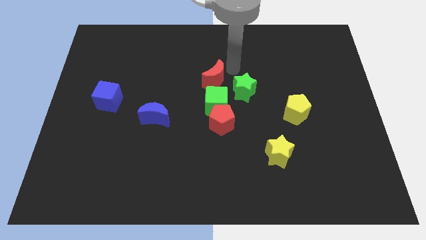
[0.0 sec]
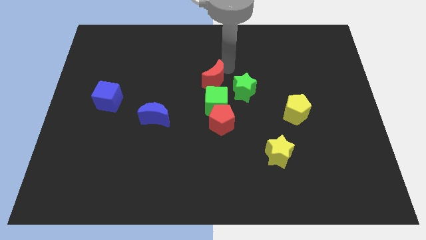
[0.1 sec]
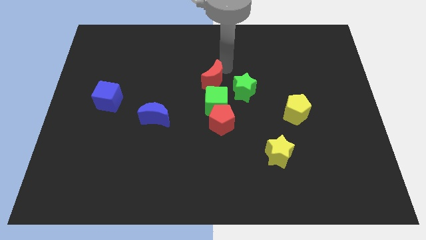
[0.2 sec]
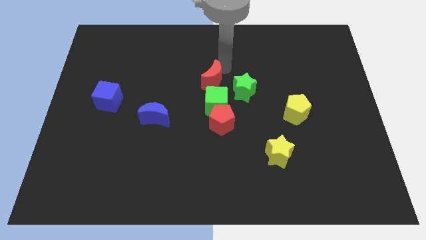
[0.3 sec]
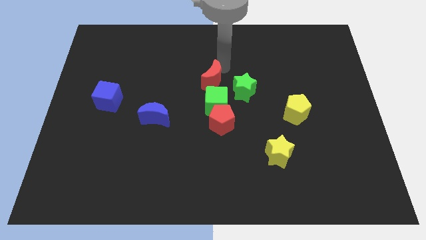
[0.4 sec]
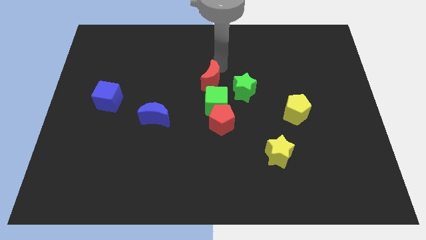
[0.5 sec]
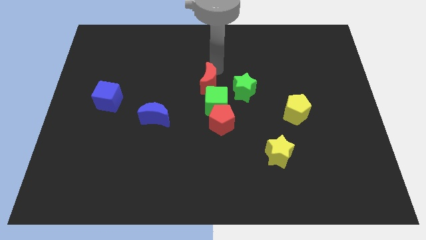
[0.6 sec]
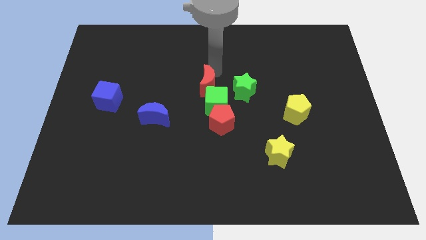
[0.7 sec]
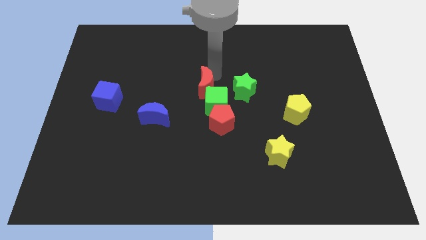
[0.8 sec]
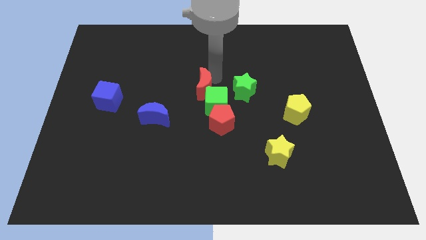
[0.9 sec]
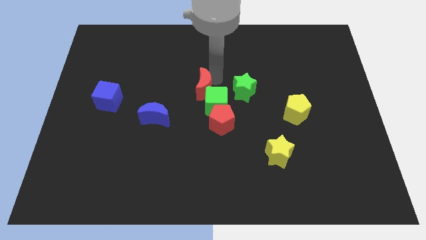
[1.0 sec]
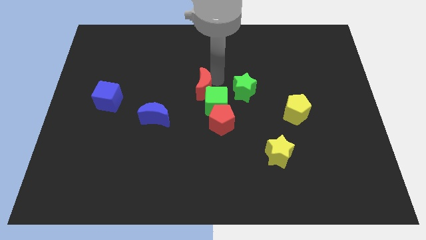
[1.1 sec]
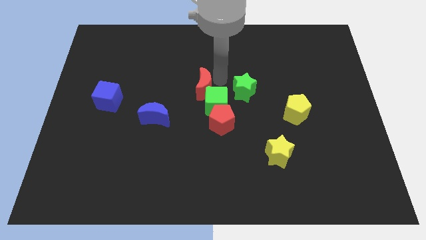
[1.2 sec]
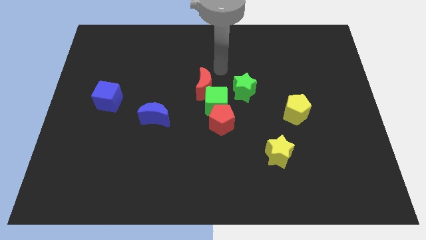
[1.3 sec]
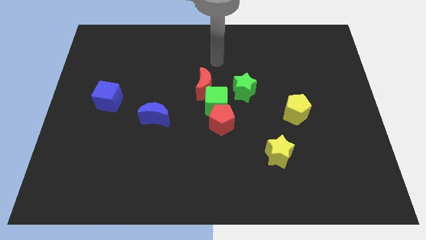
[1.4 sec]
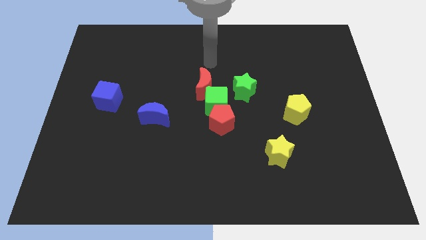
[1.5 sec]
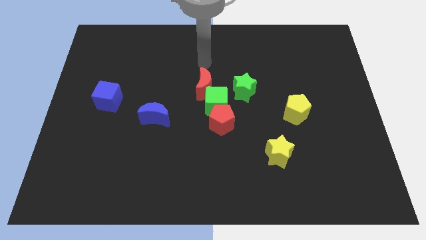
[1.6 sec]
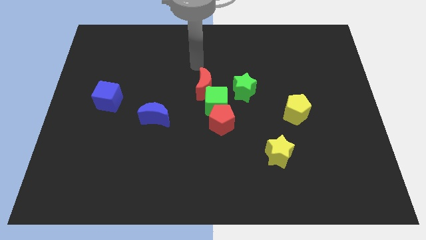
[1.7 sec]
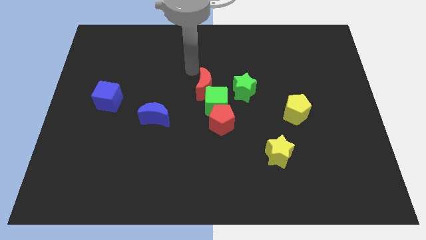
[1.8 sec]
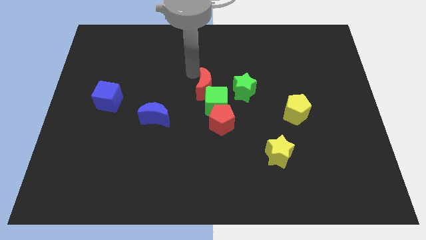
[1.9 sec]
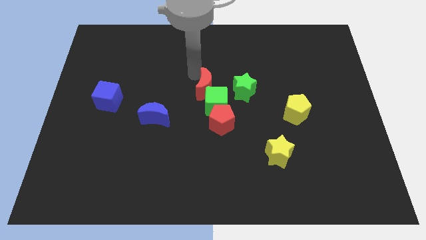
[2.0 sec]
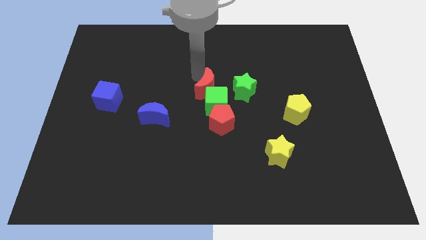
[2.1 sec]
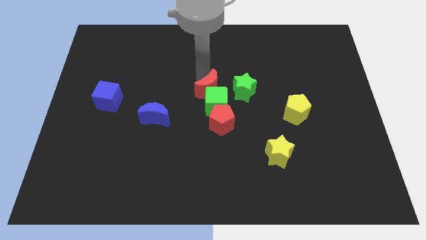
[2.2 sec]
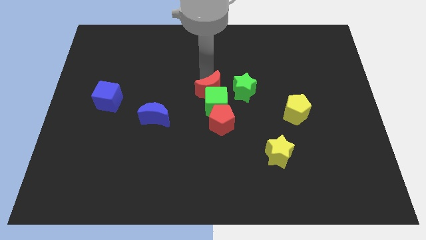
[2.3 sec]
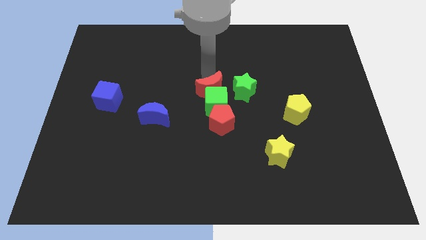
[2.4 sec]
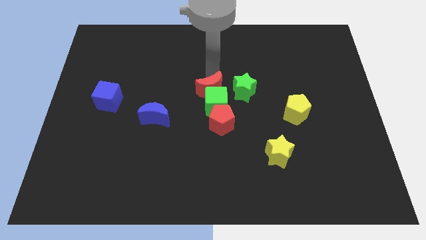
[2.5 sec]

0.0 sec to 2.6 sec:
place the red crescent into top of the green cube

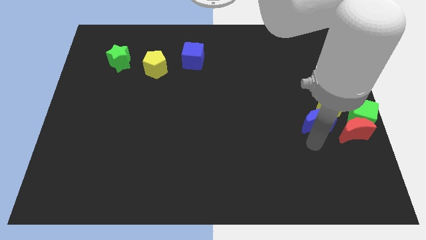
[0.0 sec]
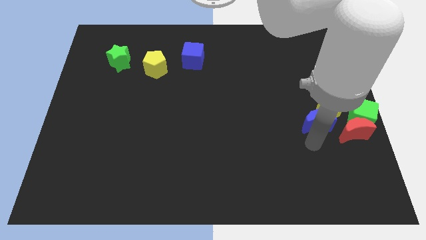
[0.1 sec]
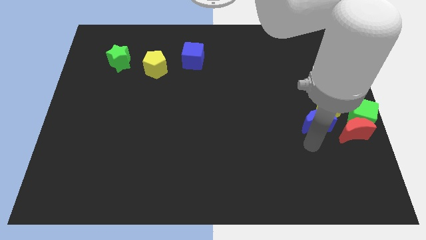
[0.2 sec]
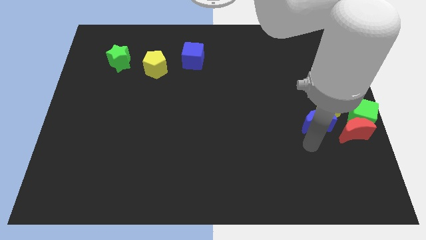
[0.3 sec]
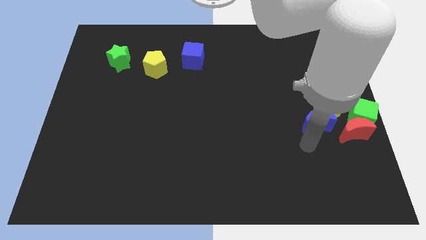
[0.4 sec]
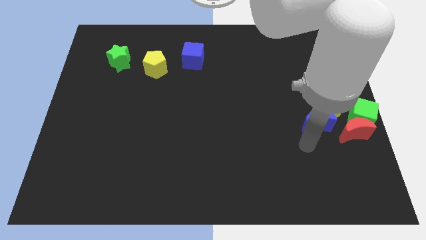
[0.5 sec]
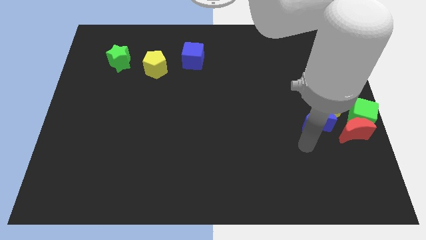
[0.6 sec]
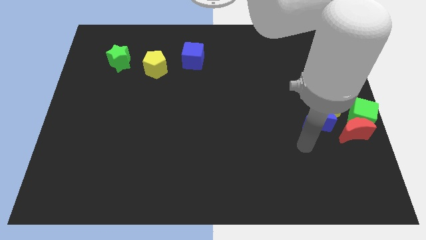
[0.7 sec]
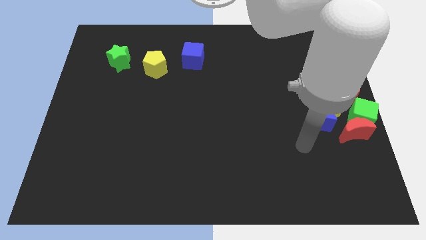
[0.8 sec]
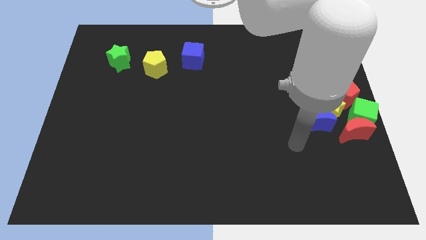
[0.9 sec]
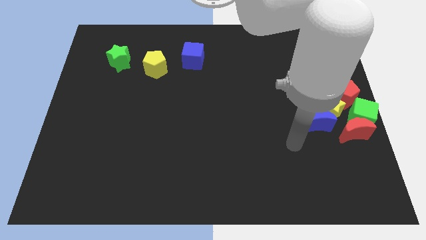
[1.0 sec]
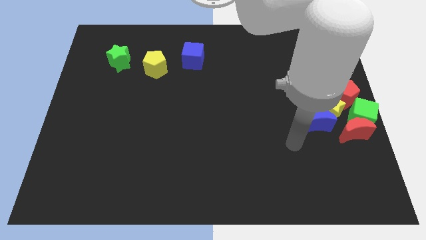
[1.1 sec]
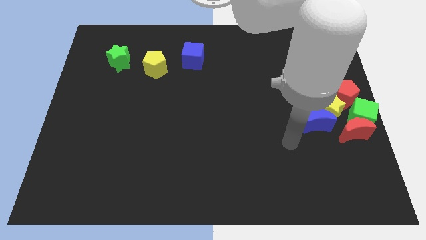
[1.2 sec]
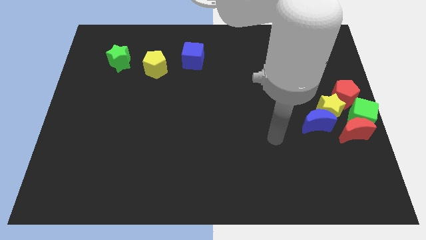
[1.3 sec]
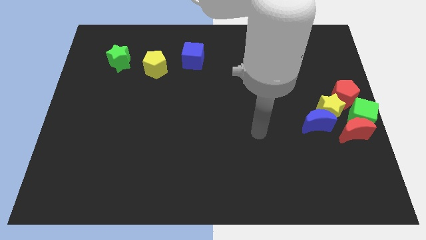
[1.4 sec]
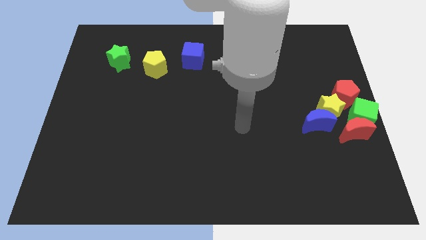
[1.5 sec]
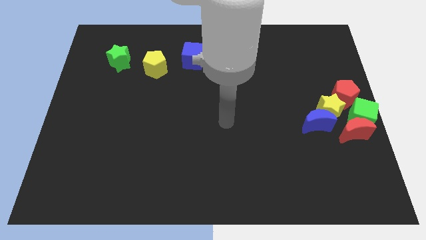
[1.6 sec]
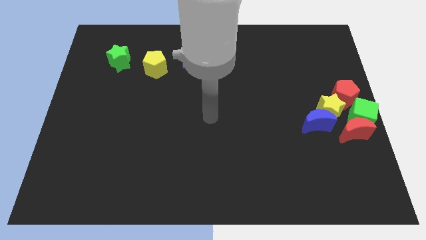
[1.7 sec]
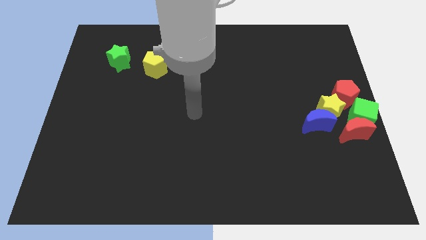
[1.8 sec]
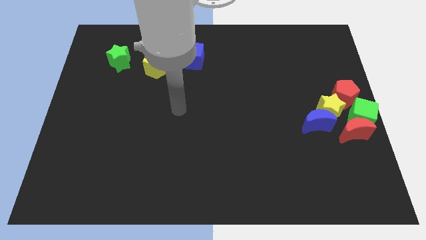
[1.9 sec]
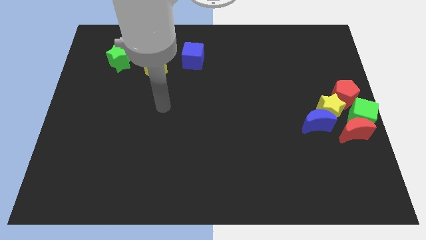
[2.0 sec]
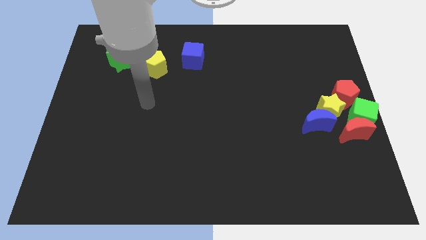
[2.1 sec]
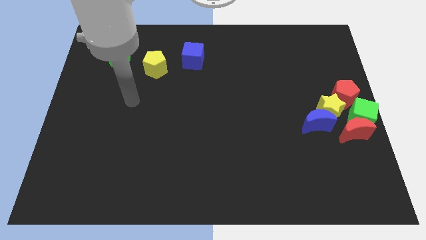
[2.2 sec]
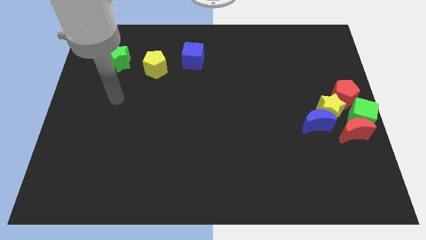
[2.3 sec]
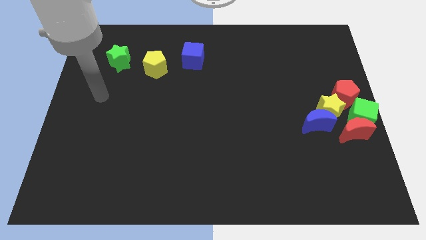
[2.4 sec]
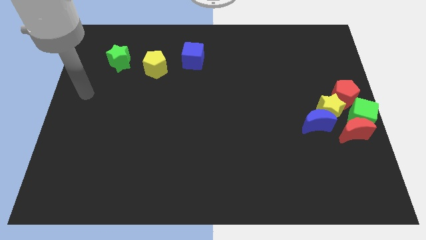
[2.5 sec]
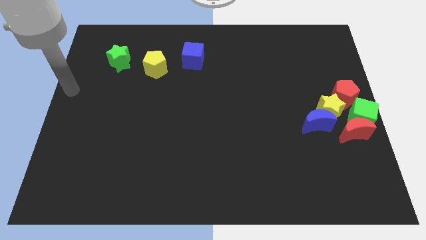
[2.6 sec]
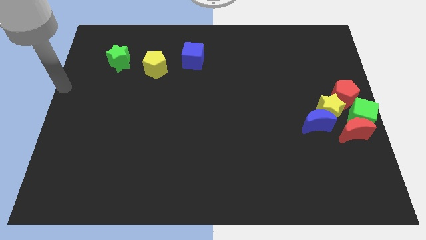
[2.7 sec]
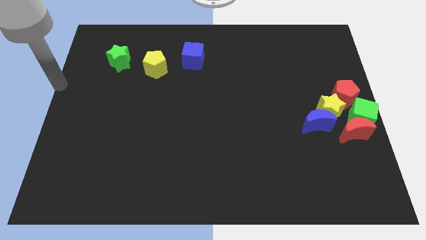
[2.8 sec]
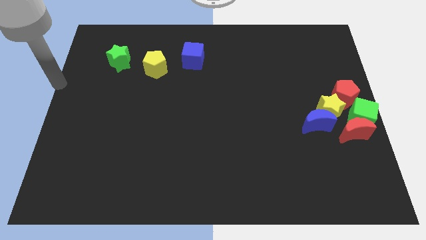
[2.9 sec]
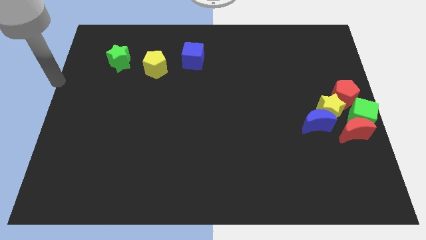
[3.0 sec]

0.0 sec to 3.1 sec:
move the arm parallel to the green star

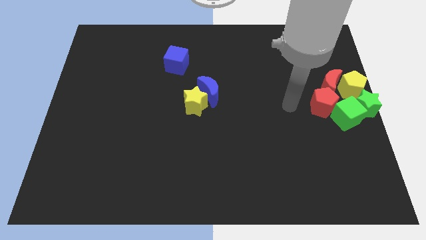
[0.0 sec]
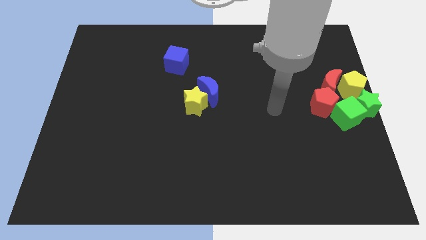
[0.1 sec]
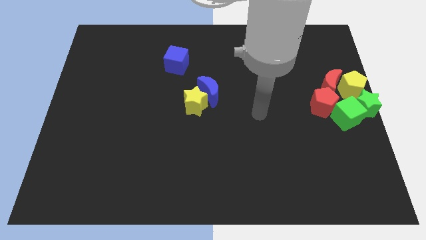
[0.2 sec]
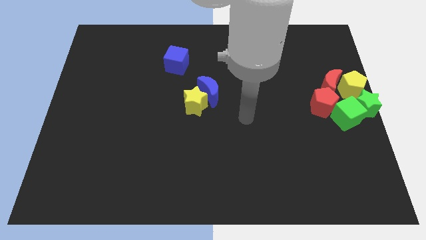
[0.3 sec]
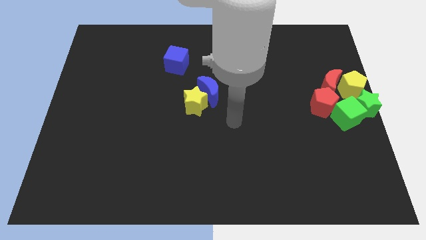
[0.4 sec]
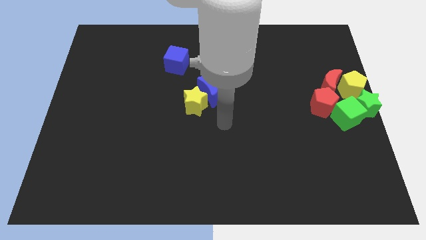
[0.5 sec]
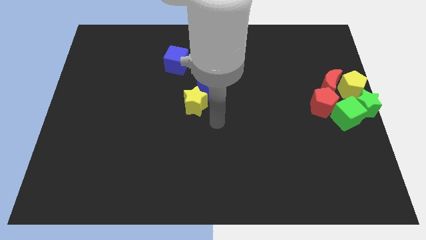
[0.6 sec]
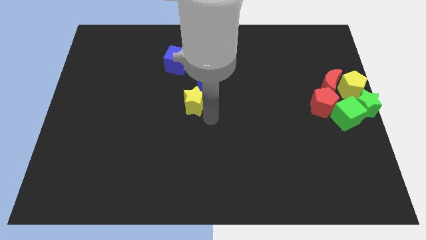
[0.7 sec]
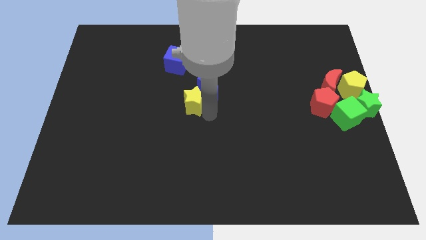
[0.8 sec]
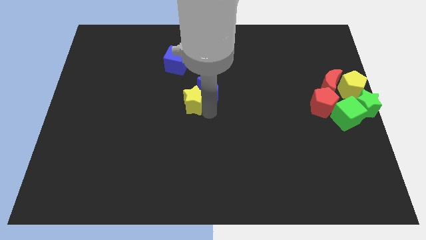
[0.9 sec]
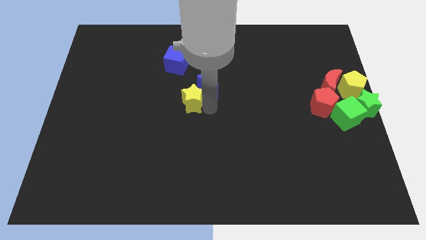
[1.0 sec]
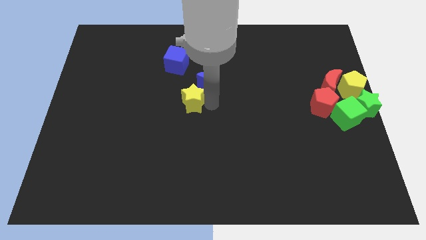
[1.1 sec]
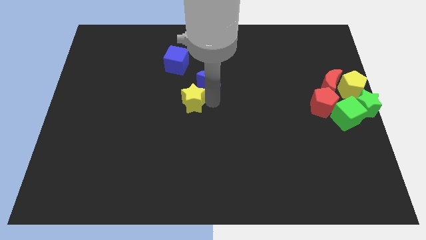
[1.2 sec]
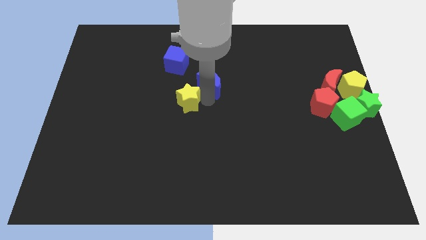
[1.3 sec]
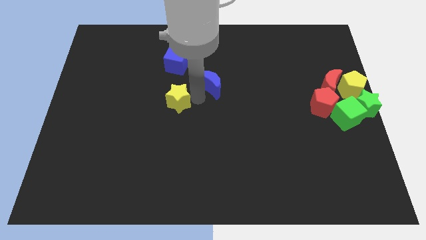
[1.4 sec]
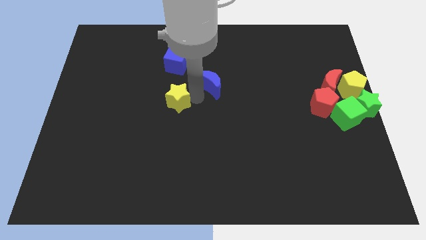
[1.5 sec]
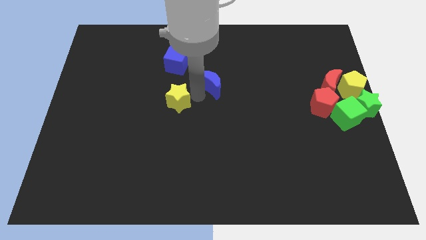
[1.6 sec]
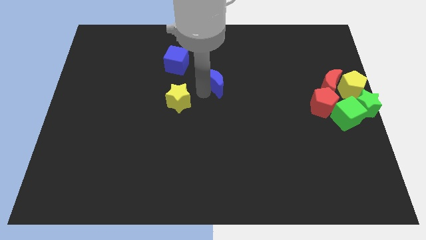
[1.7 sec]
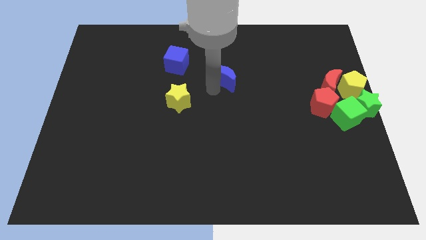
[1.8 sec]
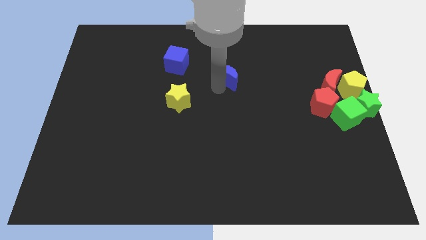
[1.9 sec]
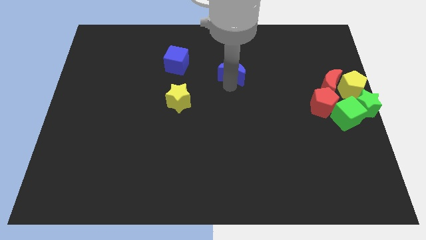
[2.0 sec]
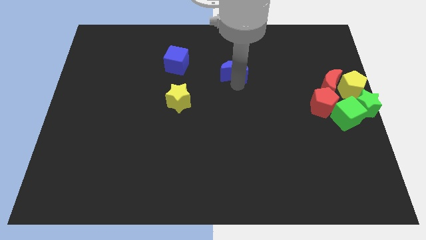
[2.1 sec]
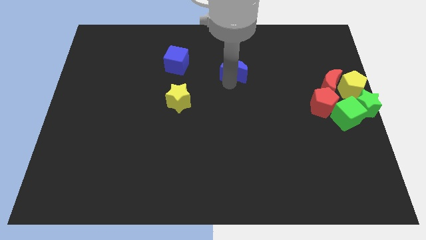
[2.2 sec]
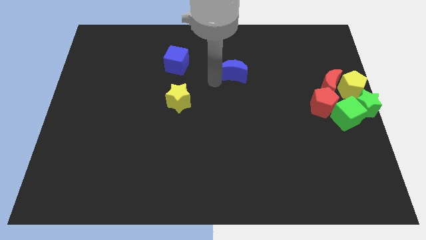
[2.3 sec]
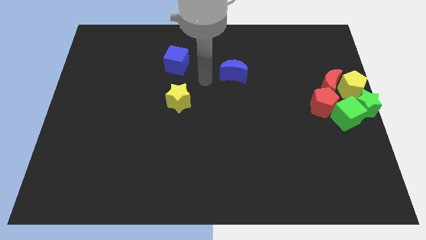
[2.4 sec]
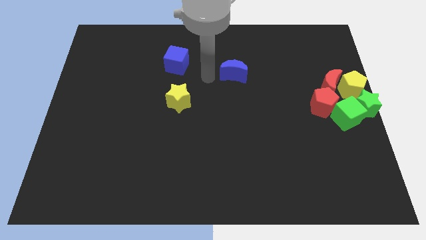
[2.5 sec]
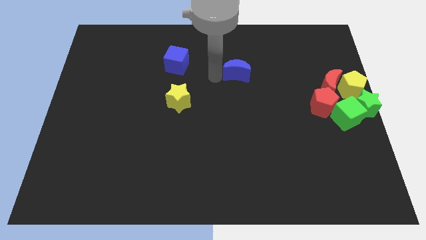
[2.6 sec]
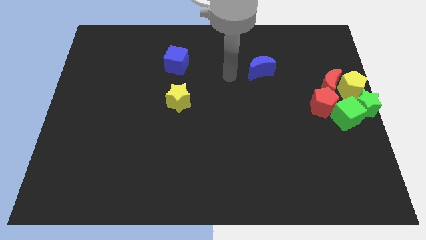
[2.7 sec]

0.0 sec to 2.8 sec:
separate the blue crescent from yellow star

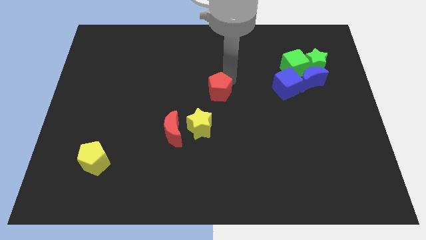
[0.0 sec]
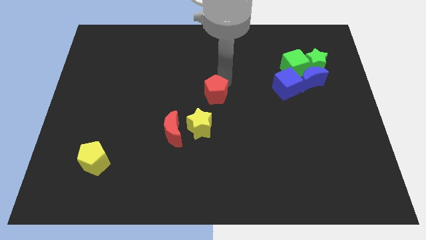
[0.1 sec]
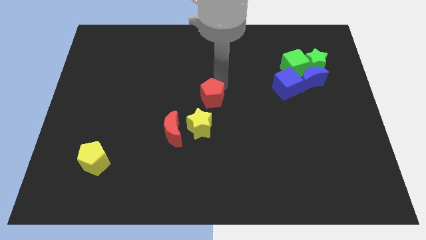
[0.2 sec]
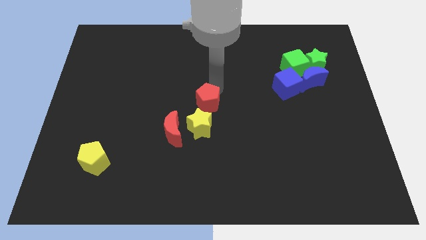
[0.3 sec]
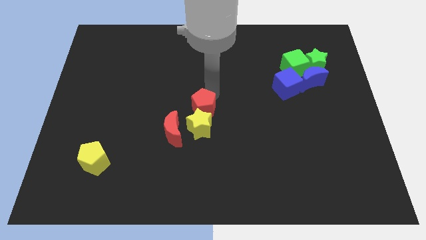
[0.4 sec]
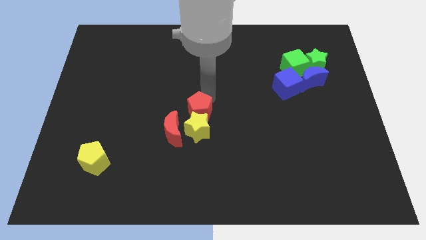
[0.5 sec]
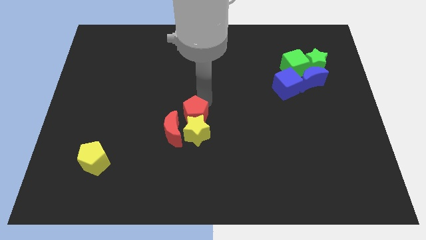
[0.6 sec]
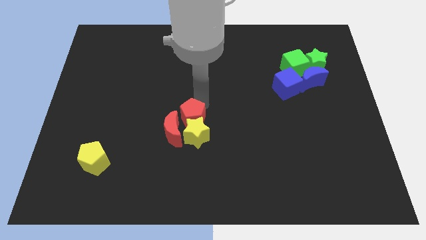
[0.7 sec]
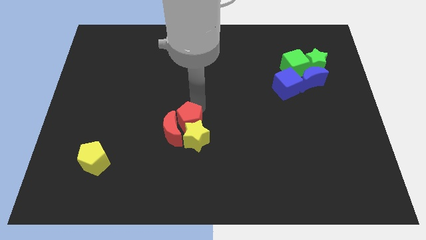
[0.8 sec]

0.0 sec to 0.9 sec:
push the red pentagon into the yellow star
